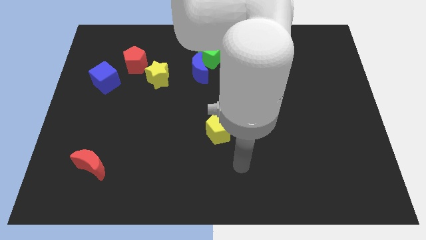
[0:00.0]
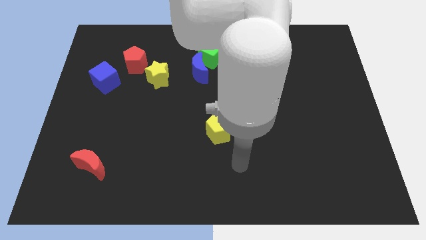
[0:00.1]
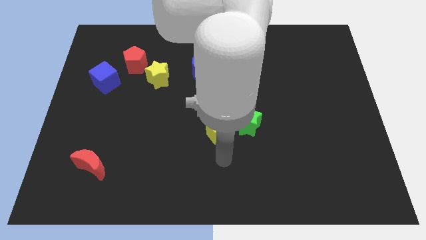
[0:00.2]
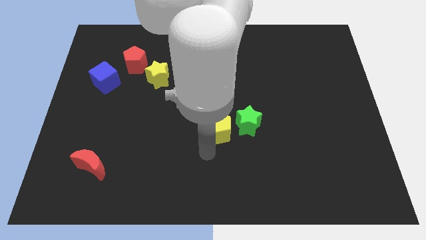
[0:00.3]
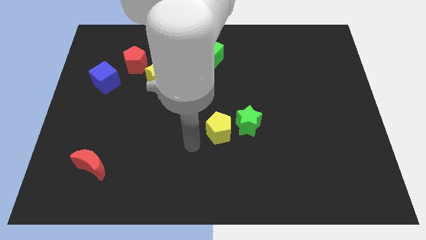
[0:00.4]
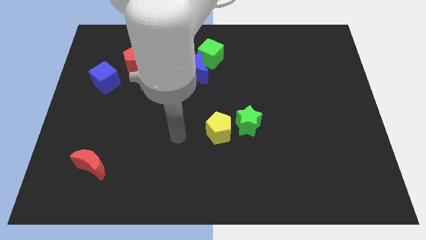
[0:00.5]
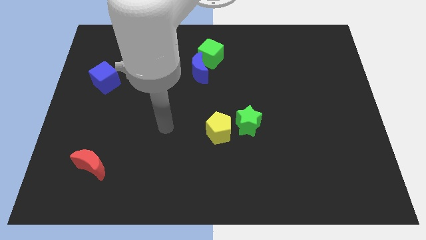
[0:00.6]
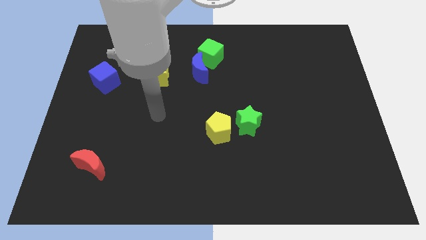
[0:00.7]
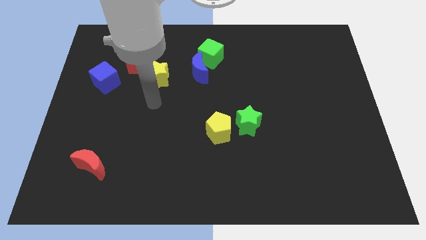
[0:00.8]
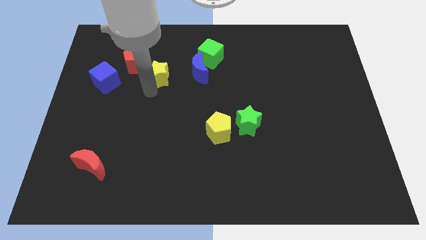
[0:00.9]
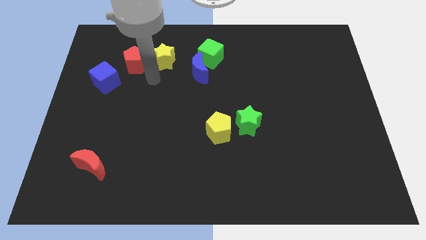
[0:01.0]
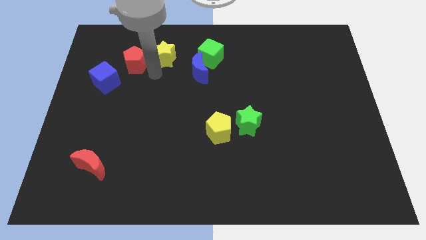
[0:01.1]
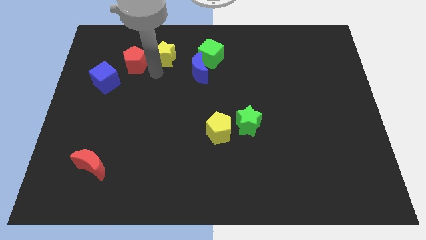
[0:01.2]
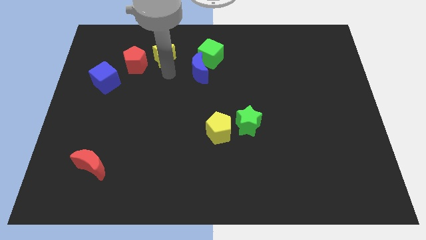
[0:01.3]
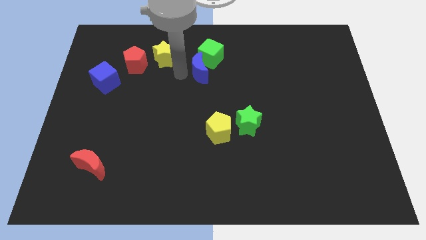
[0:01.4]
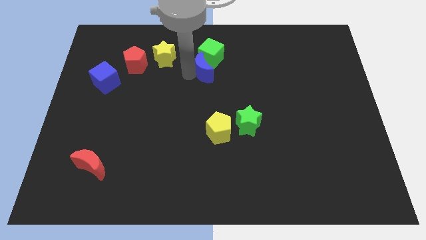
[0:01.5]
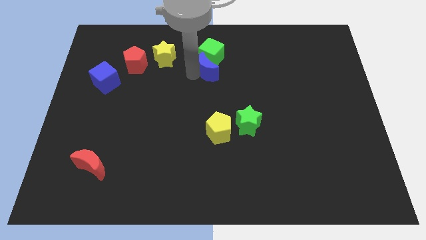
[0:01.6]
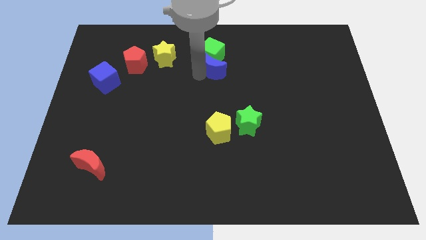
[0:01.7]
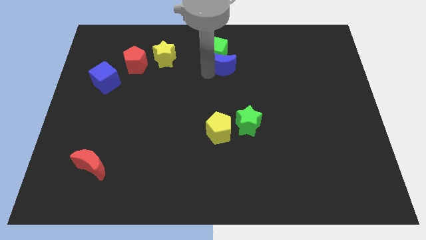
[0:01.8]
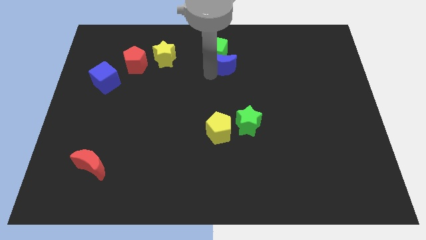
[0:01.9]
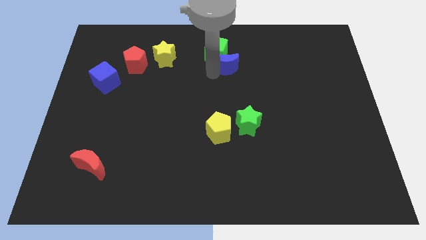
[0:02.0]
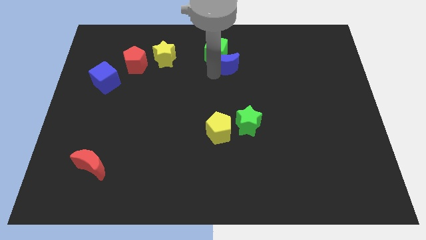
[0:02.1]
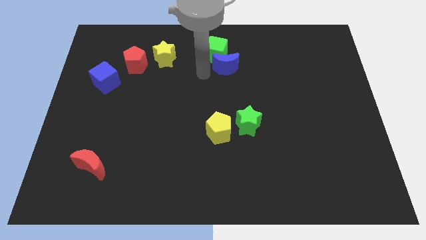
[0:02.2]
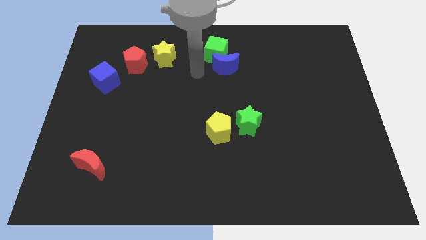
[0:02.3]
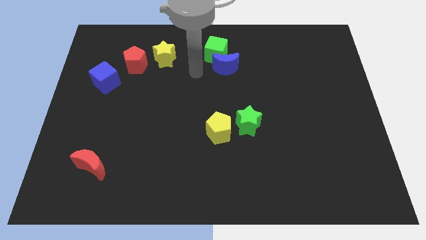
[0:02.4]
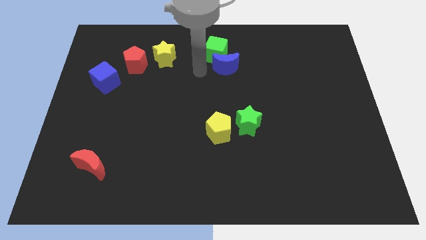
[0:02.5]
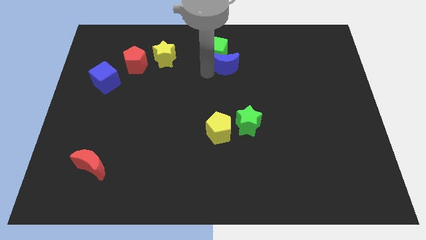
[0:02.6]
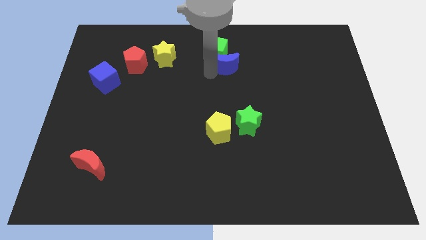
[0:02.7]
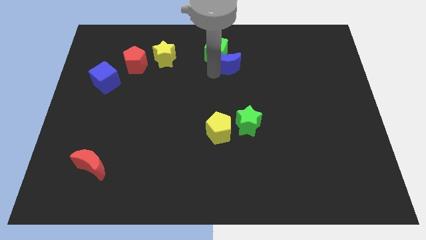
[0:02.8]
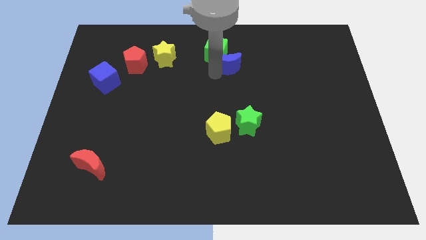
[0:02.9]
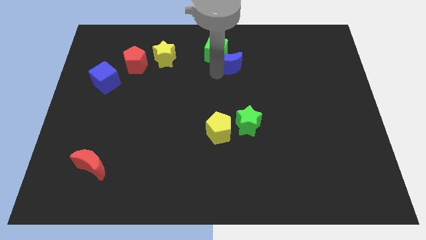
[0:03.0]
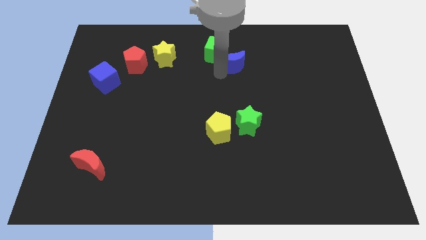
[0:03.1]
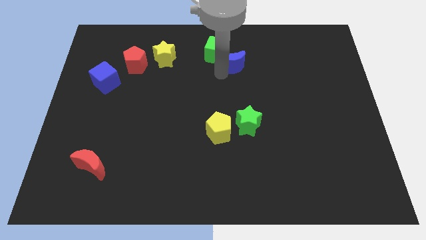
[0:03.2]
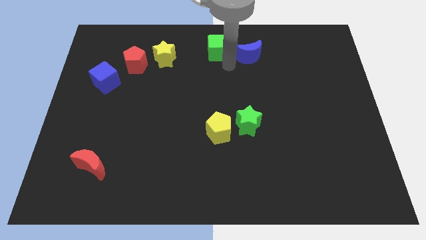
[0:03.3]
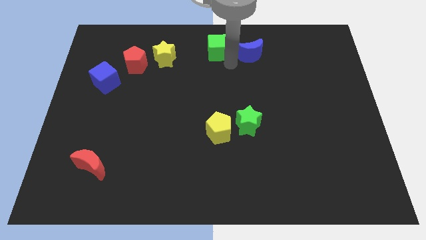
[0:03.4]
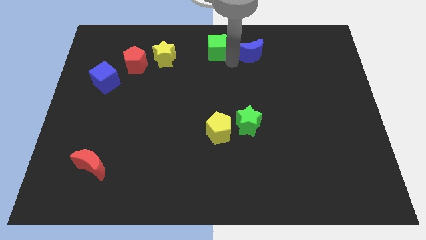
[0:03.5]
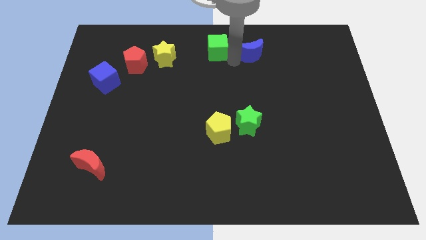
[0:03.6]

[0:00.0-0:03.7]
separate the green cube and the blue moon

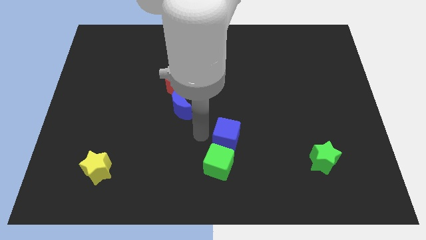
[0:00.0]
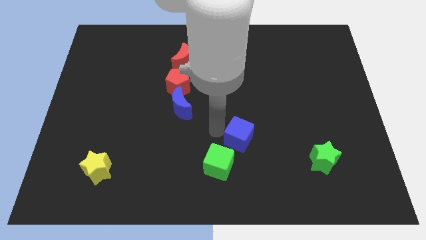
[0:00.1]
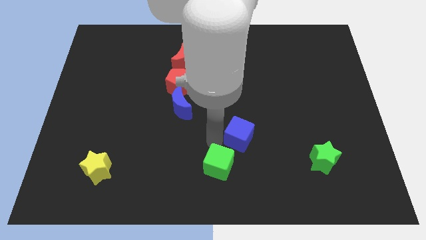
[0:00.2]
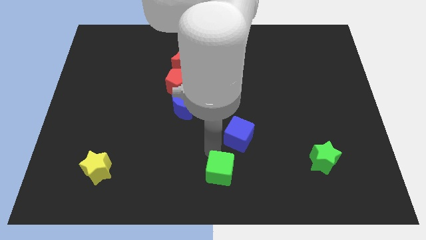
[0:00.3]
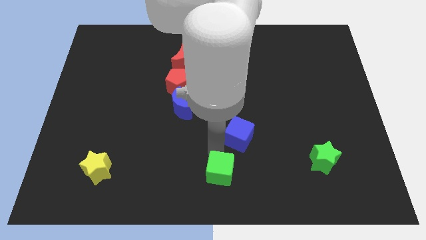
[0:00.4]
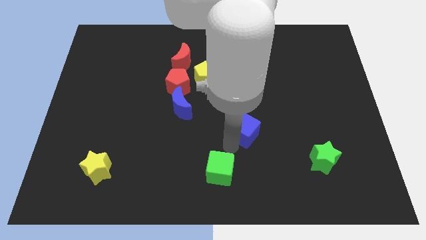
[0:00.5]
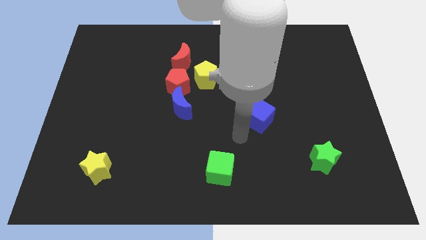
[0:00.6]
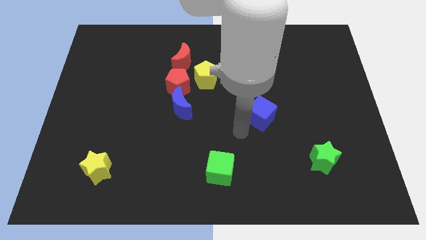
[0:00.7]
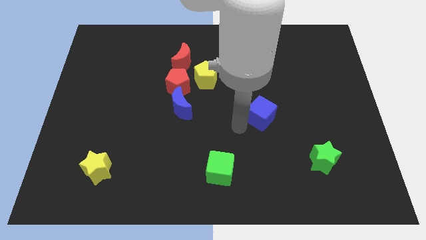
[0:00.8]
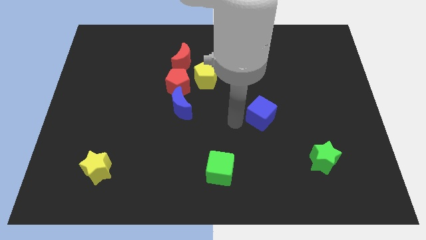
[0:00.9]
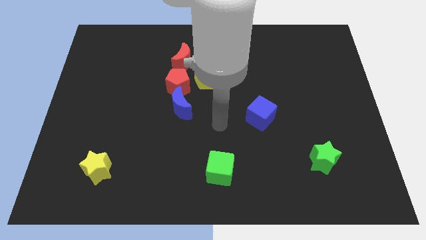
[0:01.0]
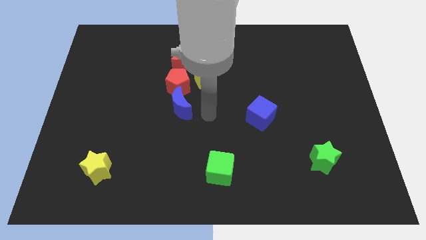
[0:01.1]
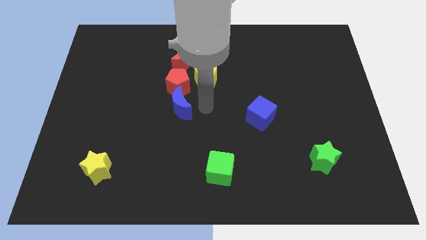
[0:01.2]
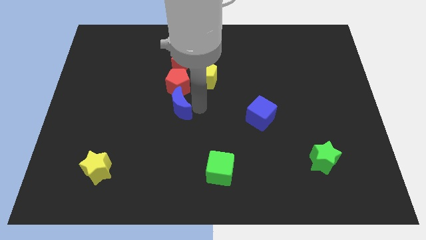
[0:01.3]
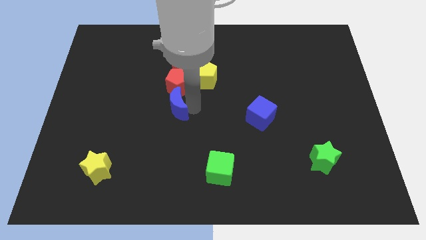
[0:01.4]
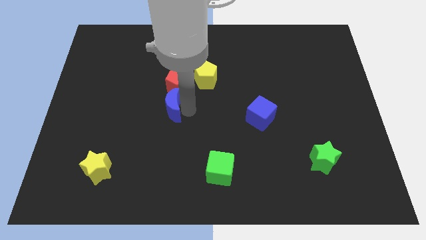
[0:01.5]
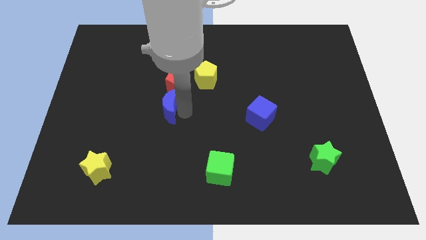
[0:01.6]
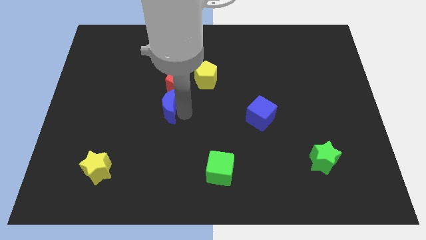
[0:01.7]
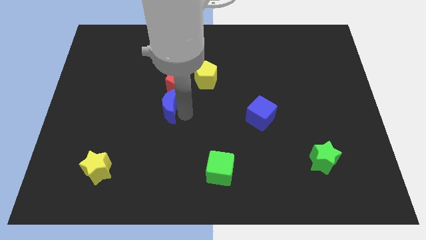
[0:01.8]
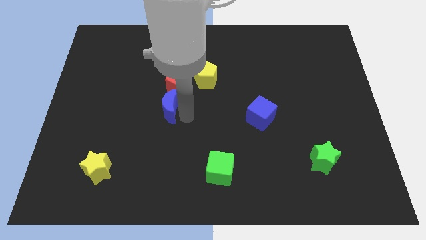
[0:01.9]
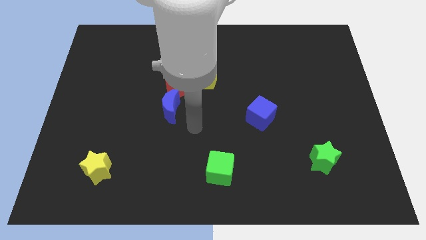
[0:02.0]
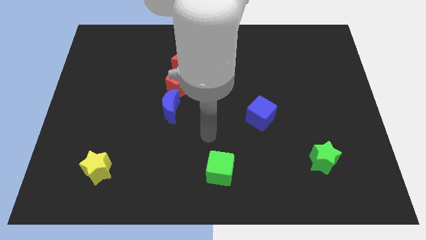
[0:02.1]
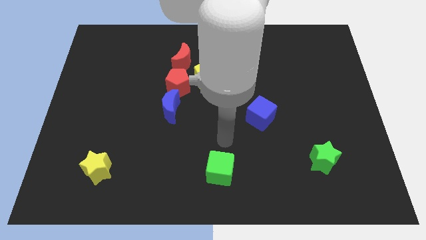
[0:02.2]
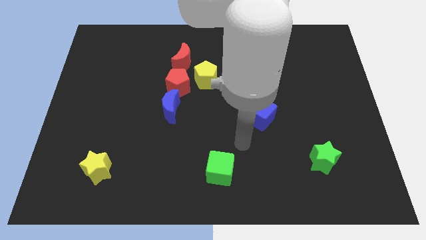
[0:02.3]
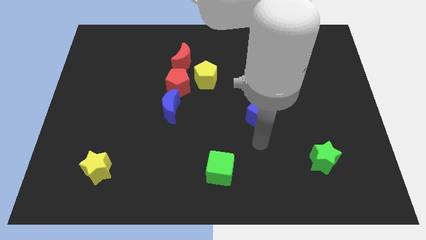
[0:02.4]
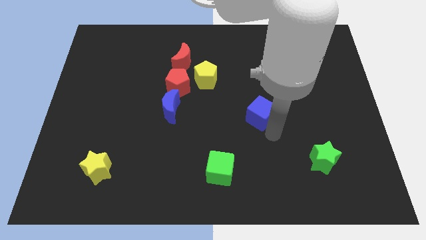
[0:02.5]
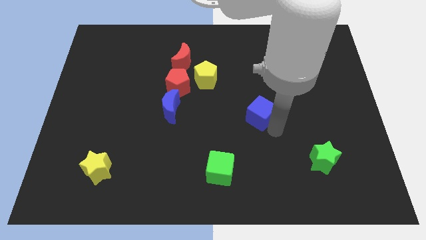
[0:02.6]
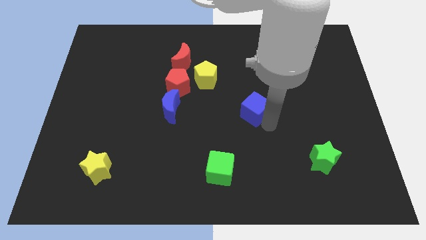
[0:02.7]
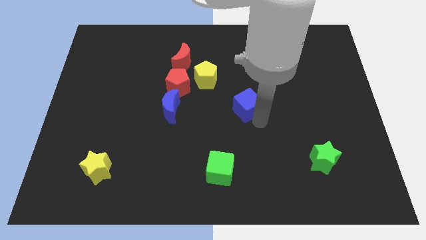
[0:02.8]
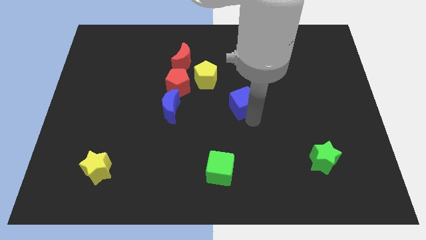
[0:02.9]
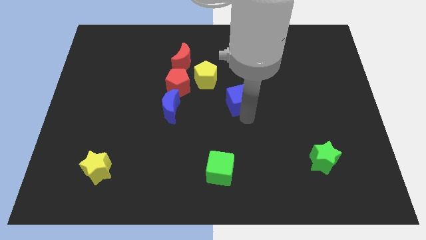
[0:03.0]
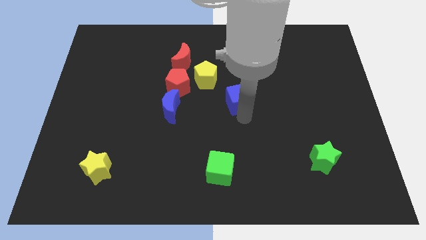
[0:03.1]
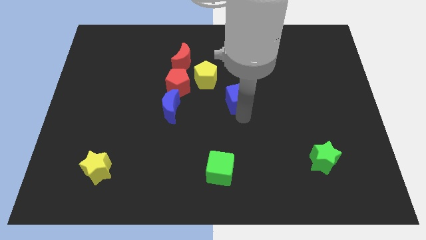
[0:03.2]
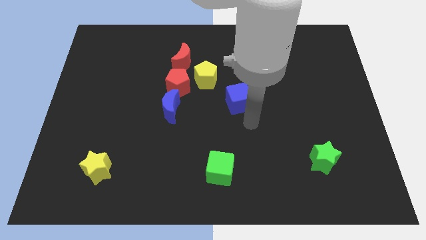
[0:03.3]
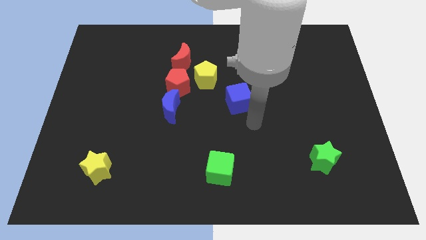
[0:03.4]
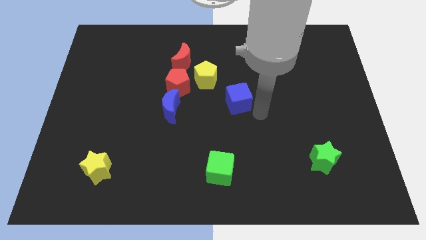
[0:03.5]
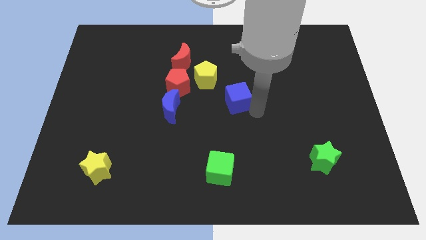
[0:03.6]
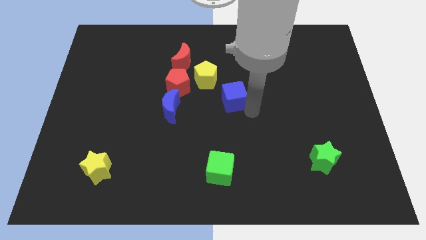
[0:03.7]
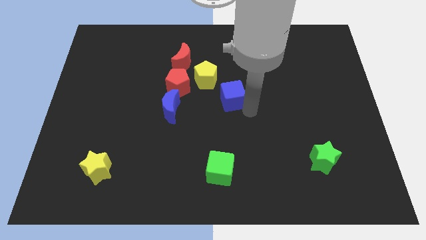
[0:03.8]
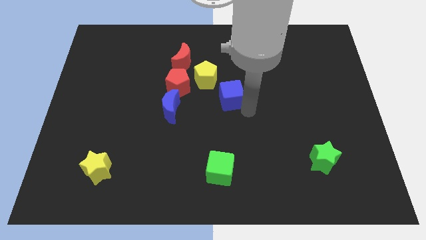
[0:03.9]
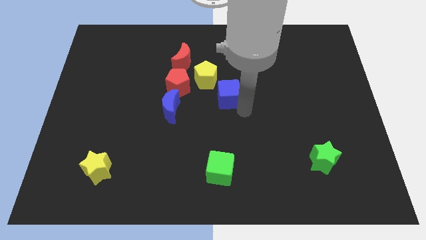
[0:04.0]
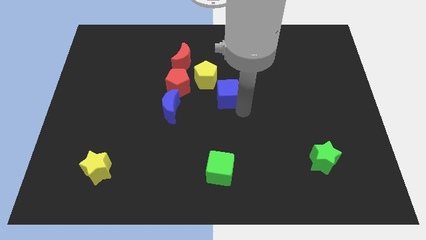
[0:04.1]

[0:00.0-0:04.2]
slide the blue cube to the bottom right of the yellow pentagon

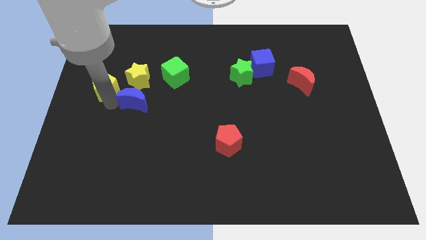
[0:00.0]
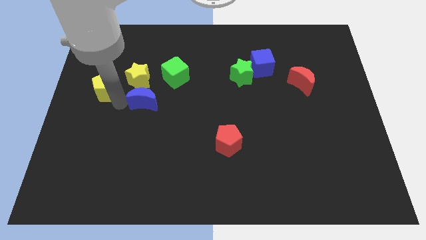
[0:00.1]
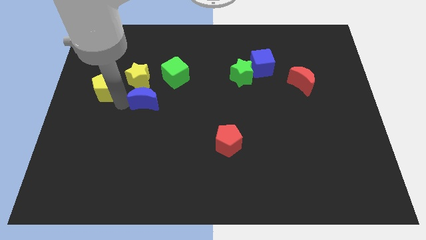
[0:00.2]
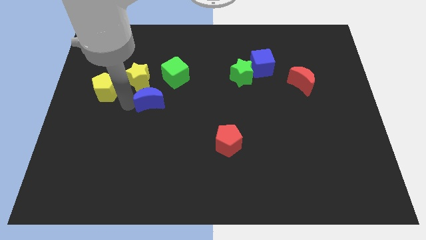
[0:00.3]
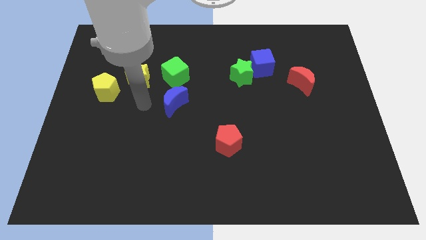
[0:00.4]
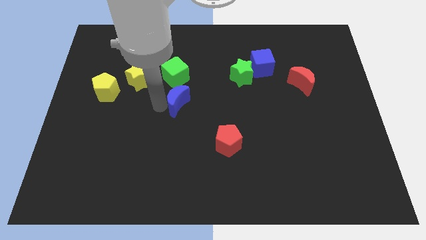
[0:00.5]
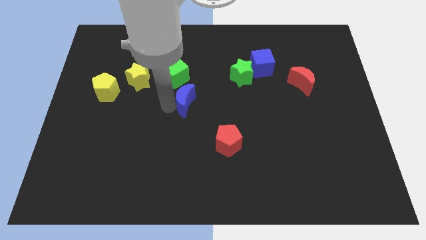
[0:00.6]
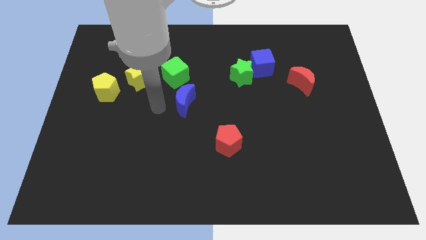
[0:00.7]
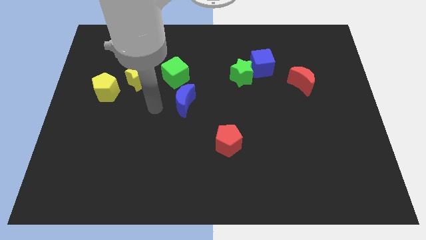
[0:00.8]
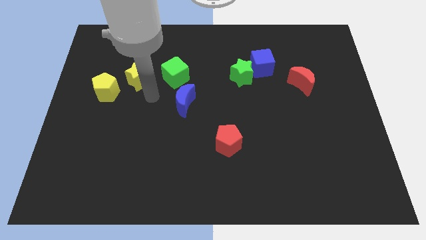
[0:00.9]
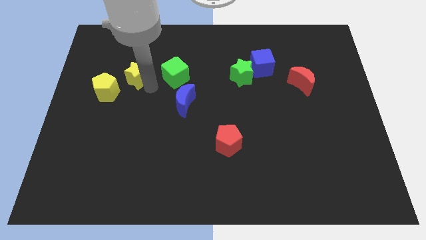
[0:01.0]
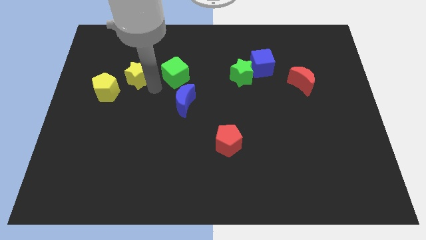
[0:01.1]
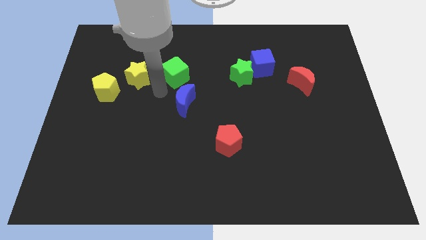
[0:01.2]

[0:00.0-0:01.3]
push blue crescent to the bottom right side of the green cube
